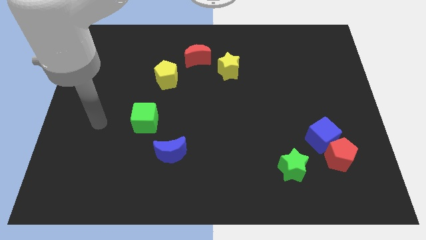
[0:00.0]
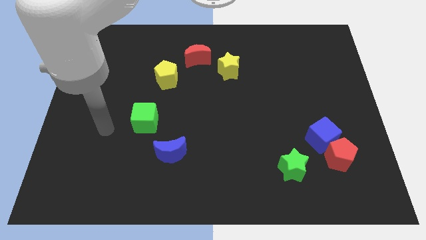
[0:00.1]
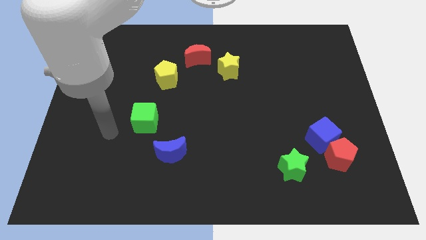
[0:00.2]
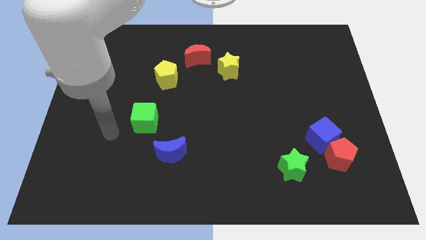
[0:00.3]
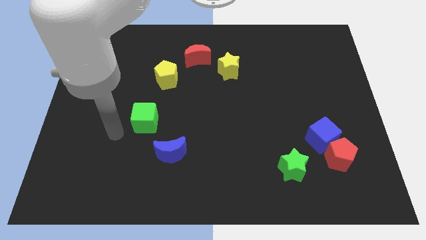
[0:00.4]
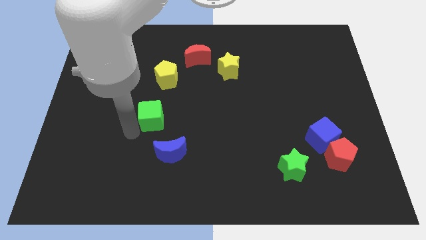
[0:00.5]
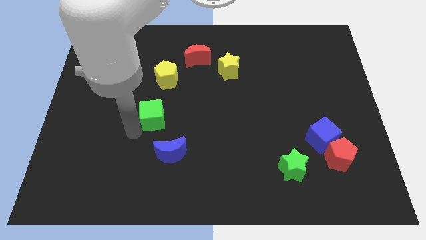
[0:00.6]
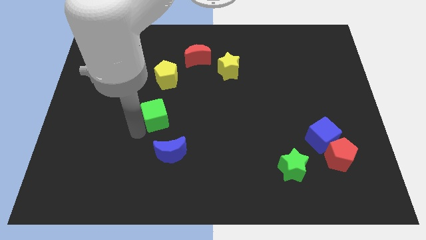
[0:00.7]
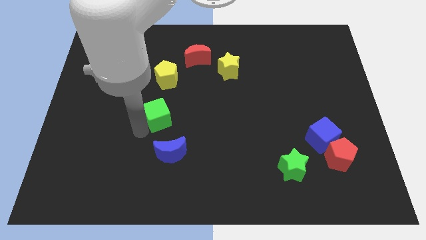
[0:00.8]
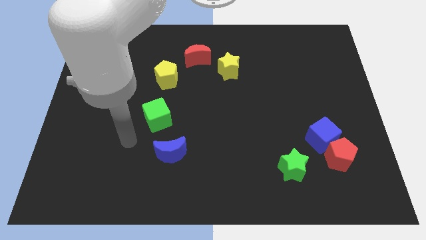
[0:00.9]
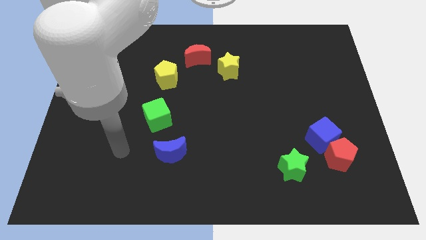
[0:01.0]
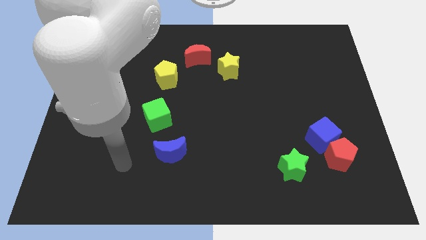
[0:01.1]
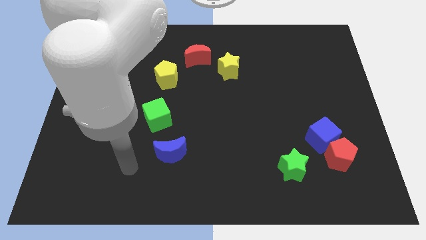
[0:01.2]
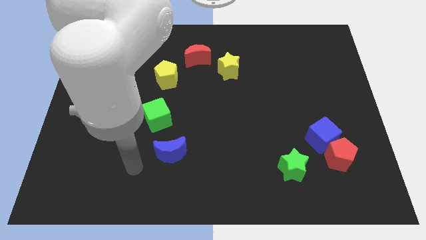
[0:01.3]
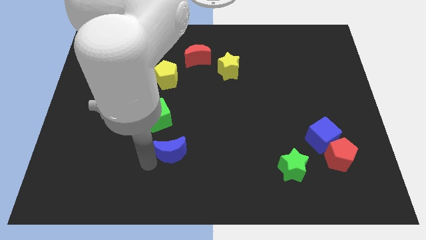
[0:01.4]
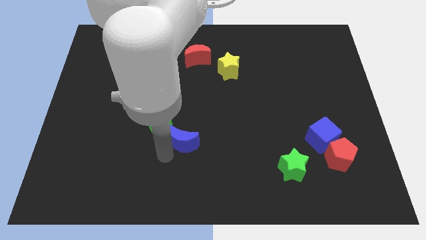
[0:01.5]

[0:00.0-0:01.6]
place the green cube vertically below the yellow pentagon

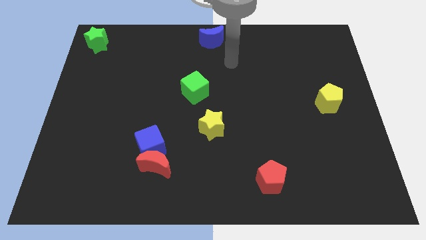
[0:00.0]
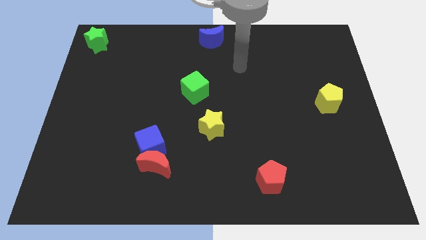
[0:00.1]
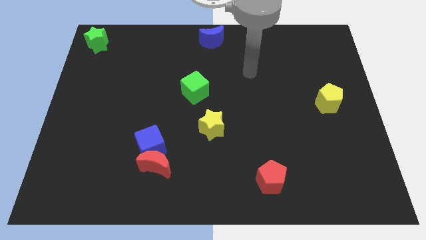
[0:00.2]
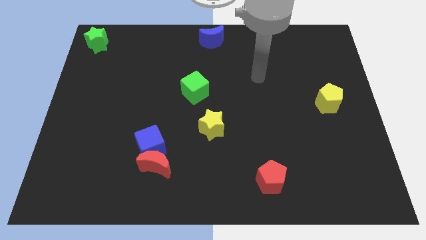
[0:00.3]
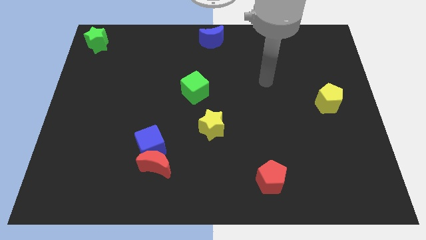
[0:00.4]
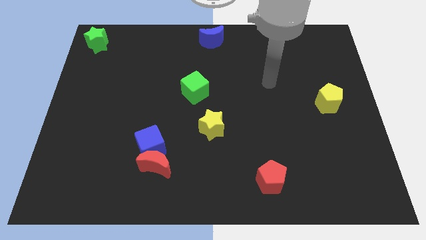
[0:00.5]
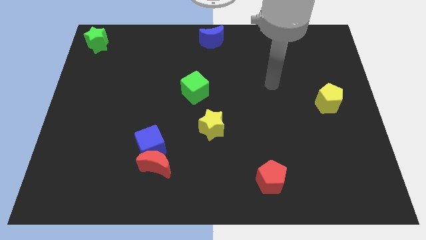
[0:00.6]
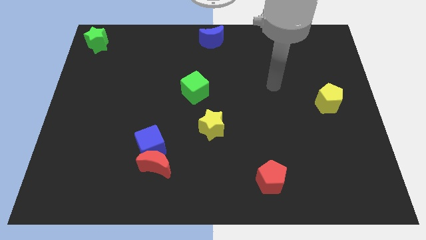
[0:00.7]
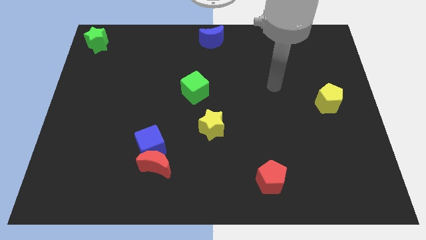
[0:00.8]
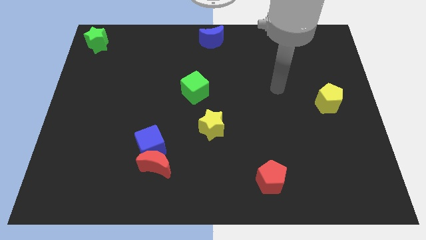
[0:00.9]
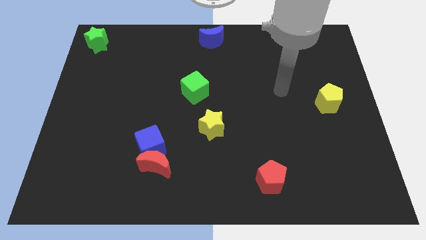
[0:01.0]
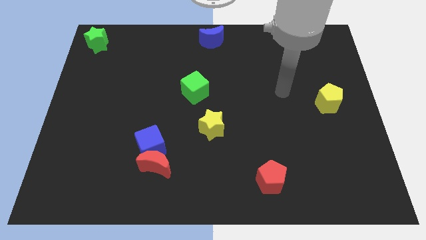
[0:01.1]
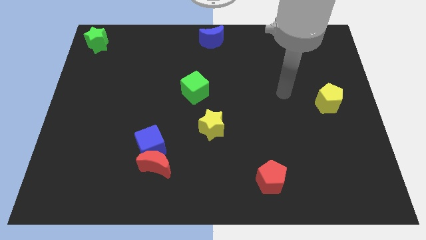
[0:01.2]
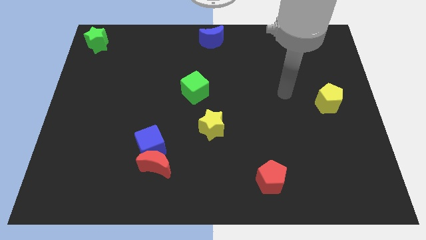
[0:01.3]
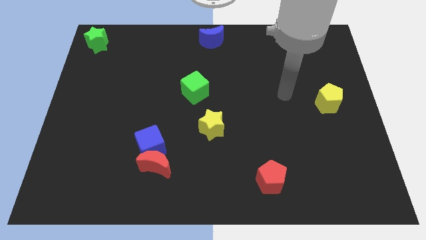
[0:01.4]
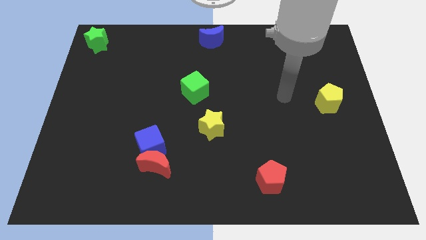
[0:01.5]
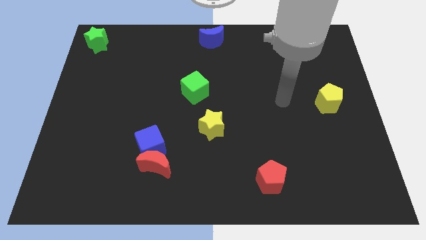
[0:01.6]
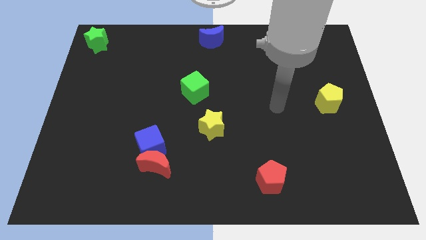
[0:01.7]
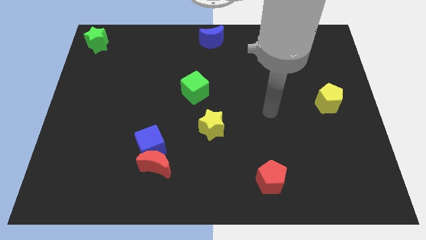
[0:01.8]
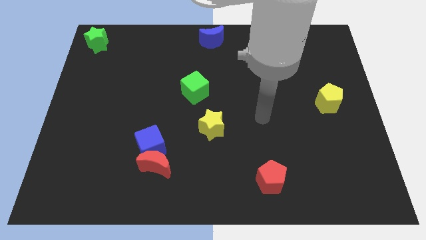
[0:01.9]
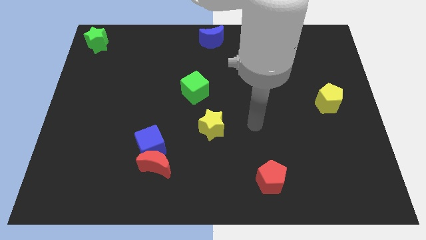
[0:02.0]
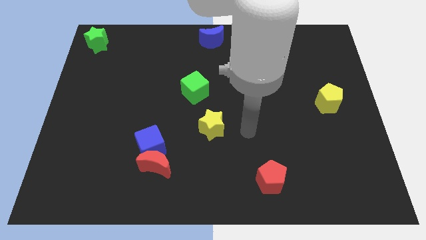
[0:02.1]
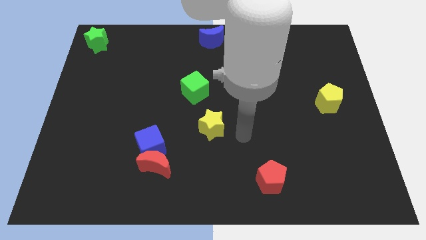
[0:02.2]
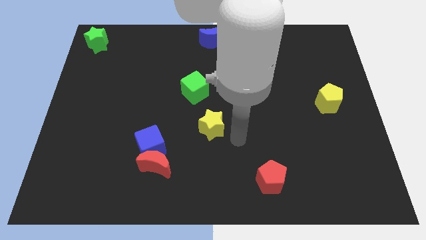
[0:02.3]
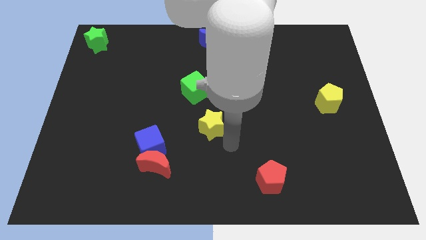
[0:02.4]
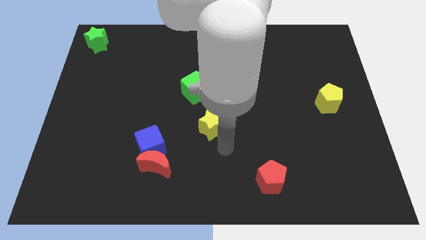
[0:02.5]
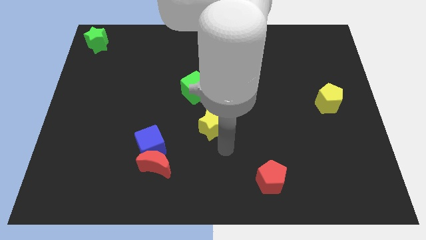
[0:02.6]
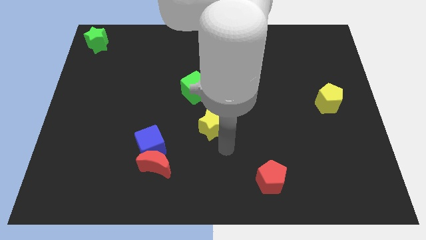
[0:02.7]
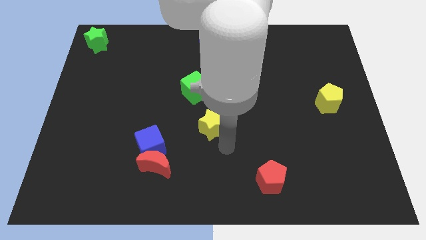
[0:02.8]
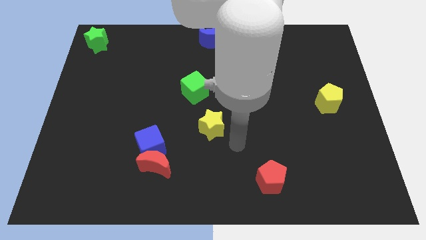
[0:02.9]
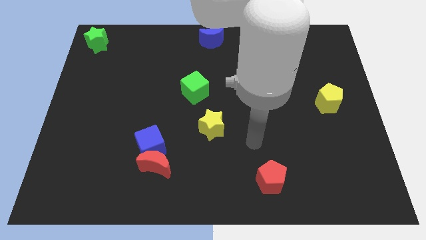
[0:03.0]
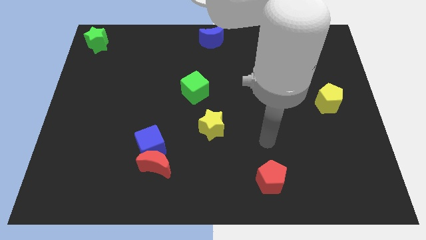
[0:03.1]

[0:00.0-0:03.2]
move arm towards the yellow star

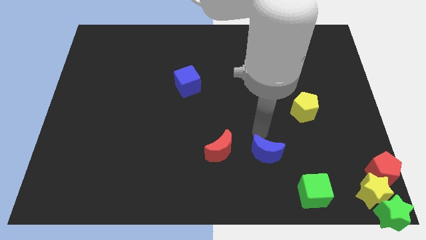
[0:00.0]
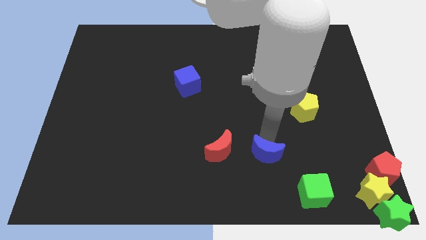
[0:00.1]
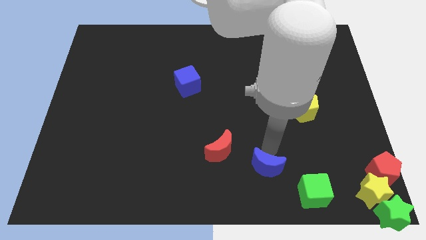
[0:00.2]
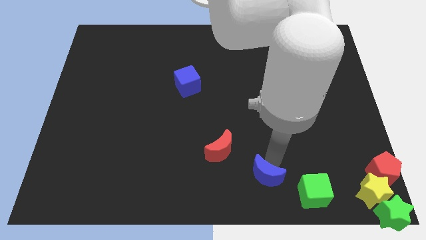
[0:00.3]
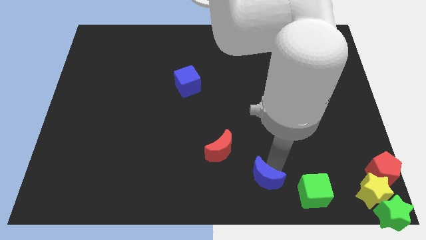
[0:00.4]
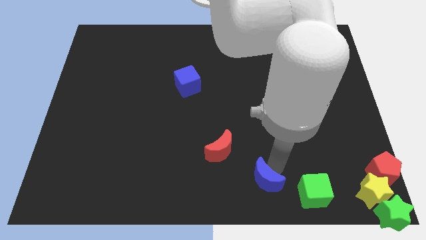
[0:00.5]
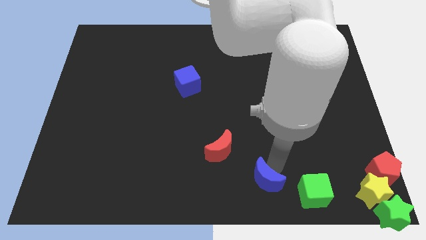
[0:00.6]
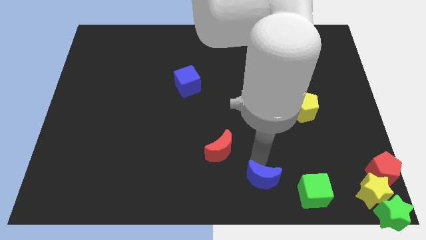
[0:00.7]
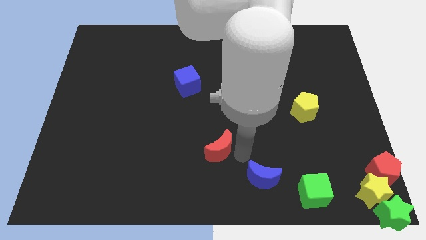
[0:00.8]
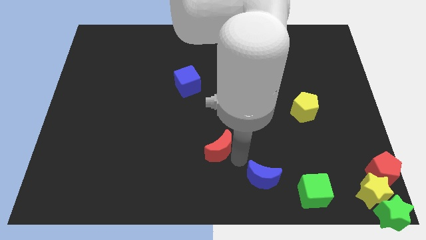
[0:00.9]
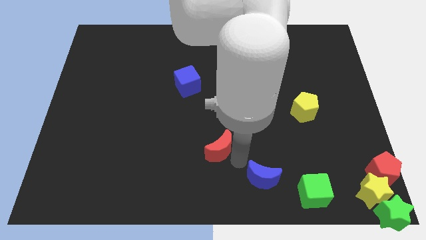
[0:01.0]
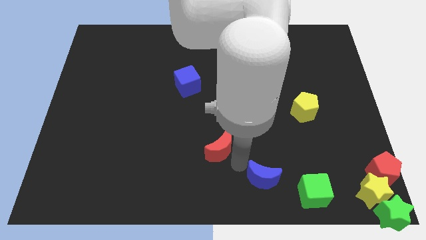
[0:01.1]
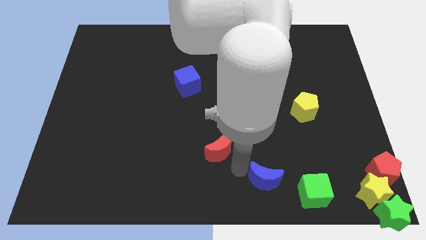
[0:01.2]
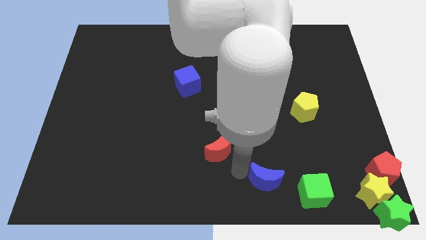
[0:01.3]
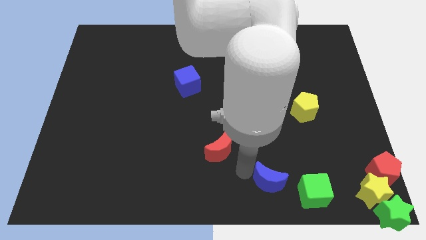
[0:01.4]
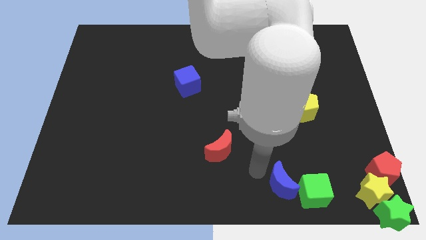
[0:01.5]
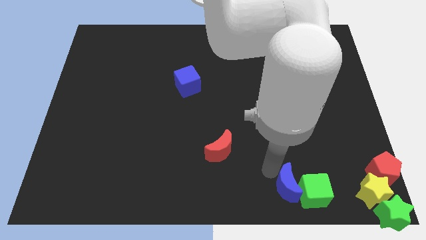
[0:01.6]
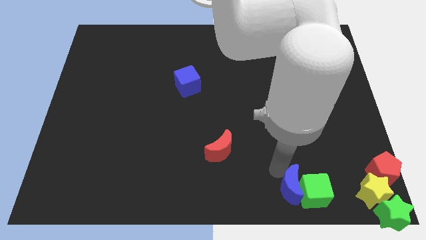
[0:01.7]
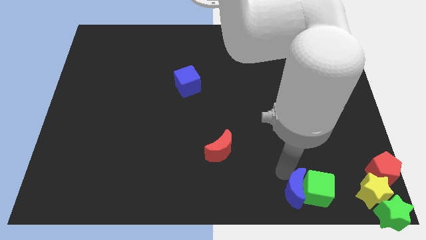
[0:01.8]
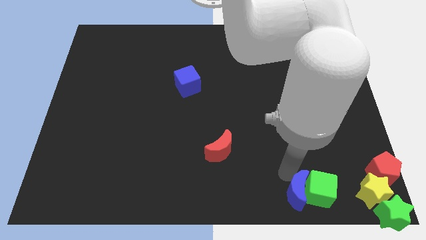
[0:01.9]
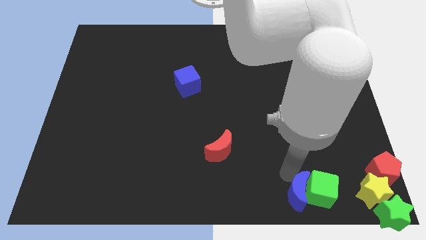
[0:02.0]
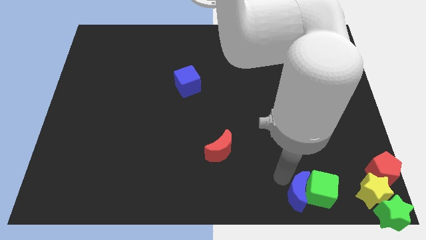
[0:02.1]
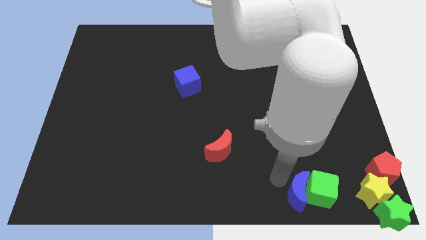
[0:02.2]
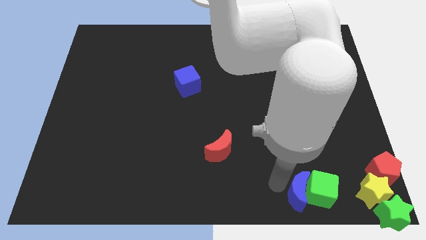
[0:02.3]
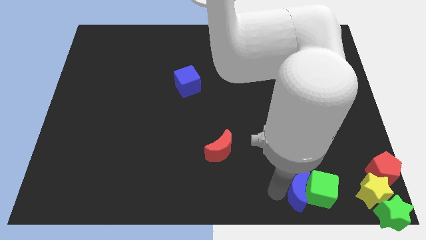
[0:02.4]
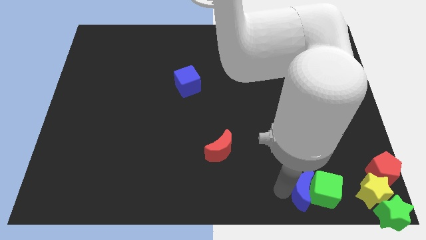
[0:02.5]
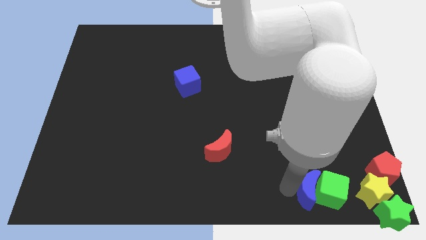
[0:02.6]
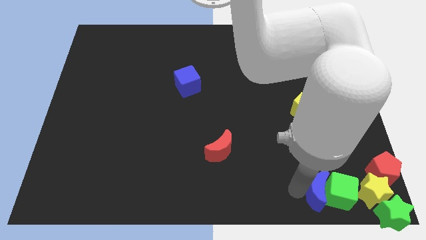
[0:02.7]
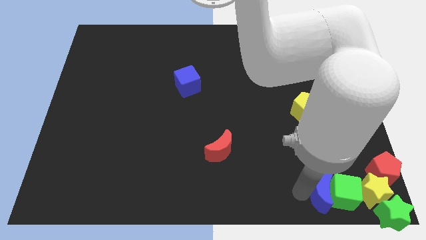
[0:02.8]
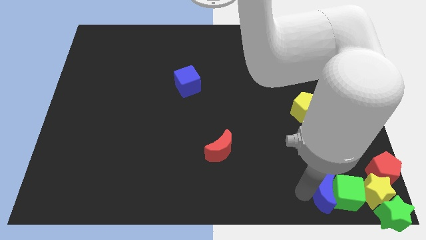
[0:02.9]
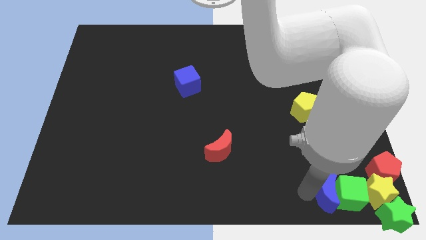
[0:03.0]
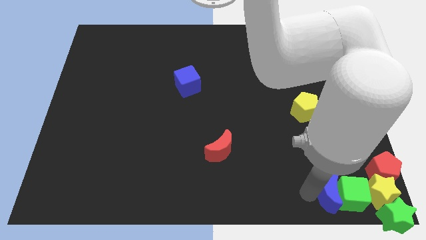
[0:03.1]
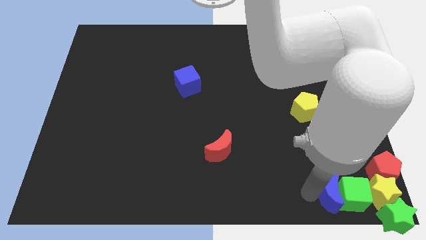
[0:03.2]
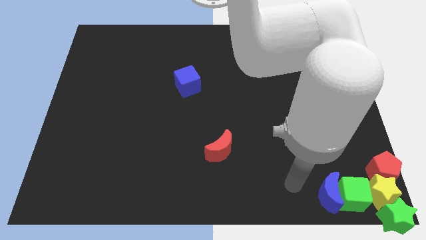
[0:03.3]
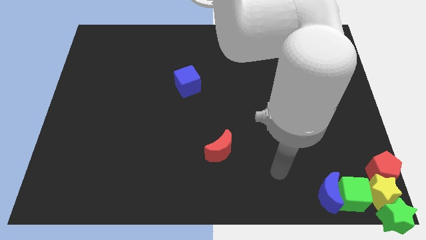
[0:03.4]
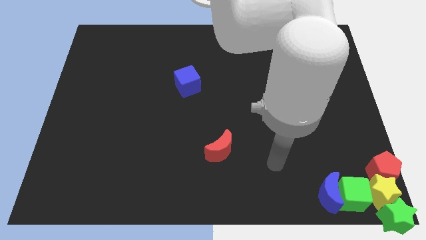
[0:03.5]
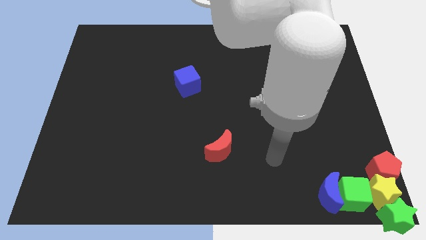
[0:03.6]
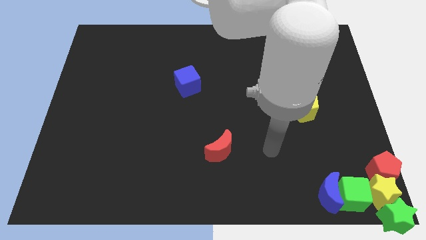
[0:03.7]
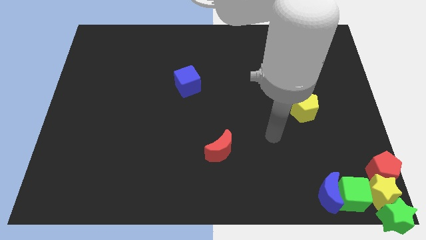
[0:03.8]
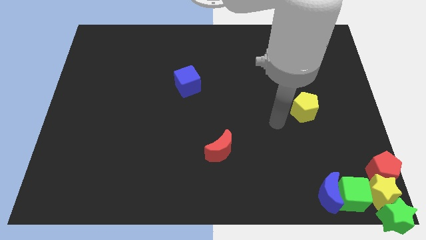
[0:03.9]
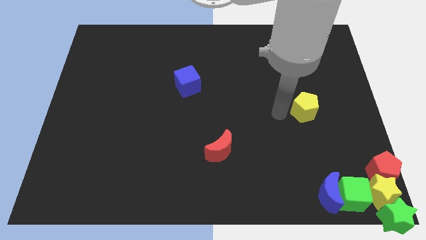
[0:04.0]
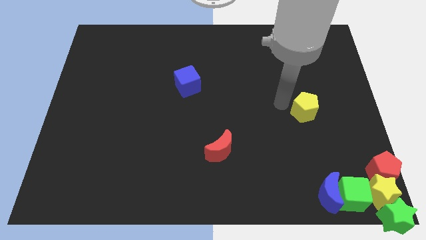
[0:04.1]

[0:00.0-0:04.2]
push the green cube and the blue crescent to the bottom right of the board
